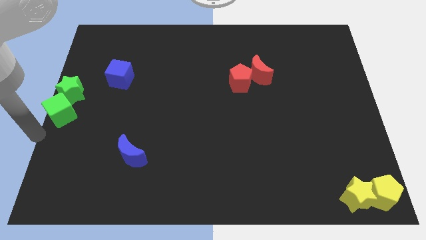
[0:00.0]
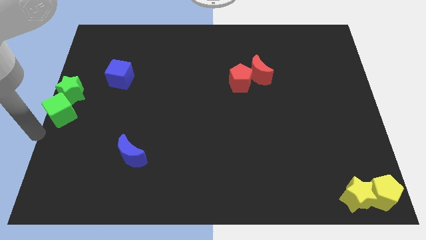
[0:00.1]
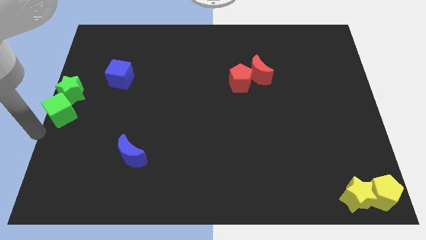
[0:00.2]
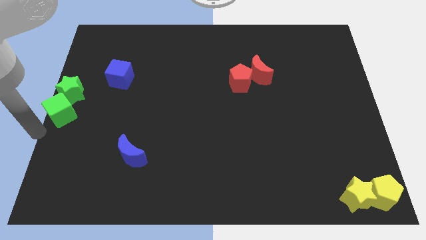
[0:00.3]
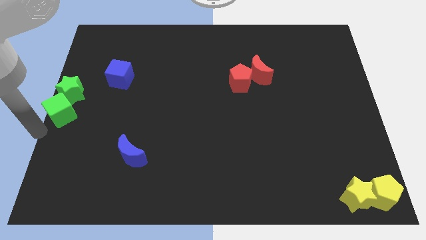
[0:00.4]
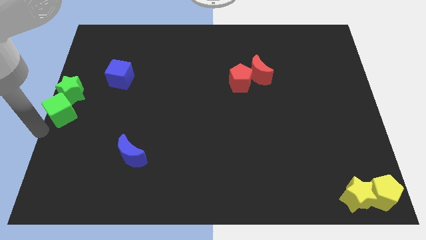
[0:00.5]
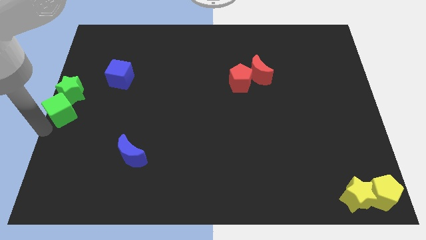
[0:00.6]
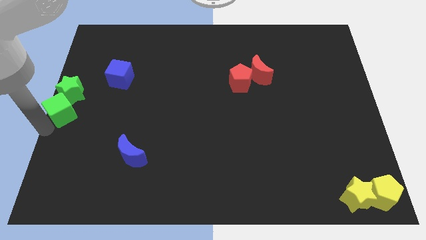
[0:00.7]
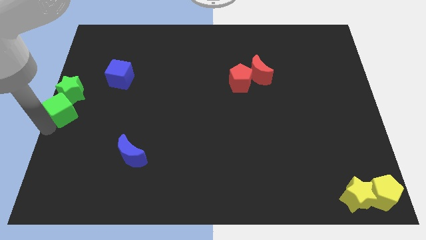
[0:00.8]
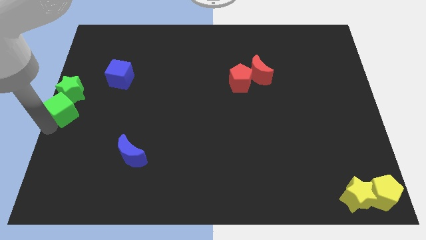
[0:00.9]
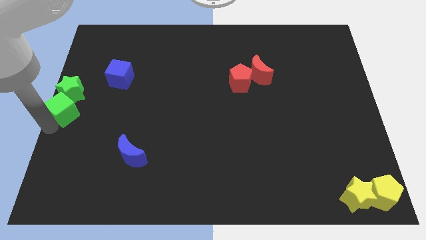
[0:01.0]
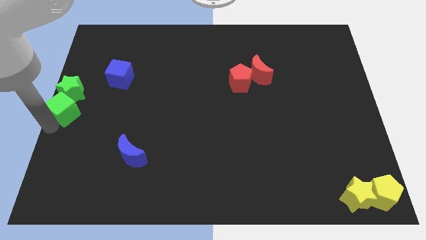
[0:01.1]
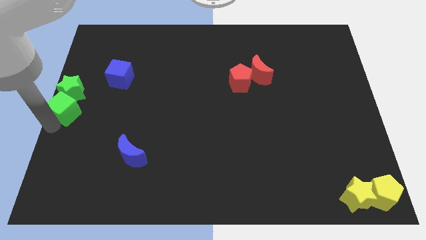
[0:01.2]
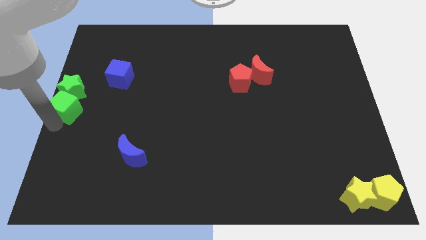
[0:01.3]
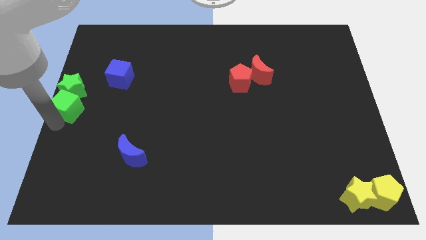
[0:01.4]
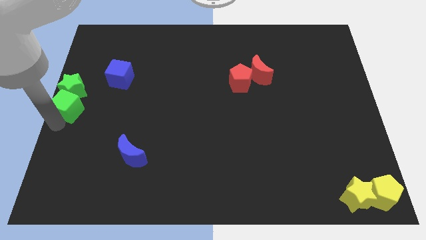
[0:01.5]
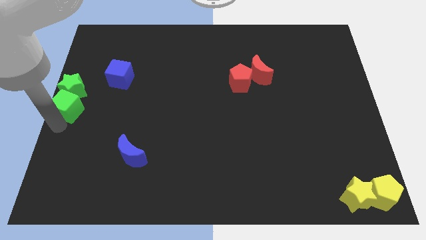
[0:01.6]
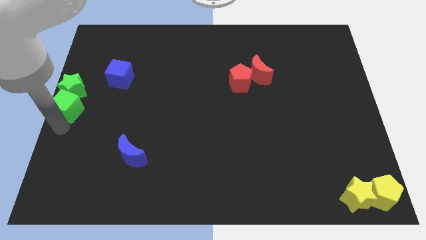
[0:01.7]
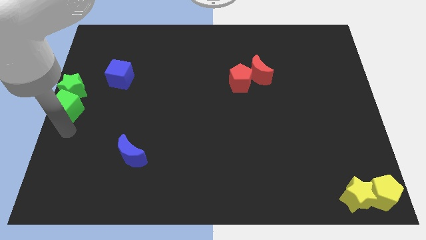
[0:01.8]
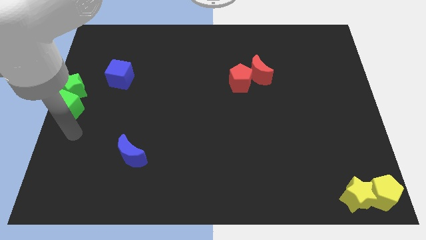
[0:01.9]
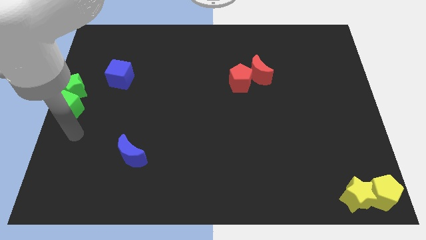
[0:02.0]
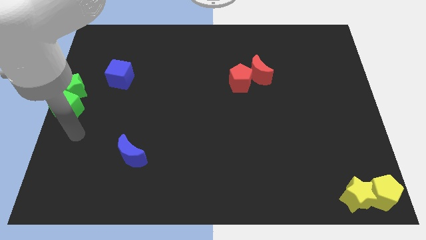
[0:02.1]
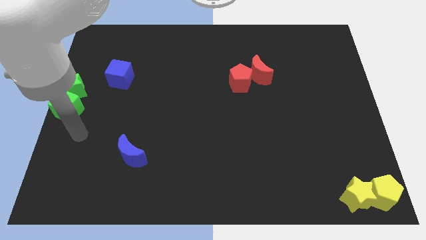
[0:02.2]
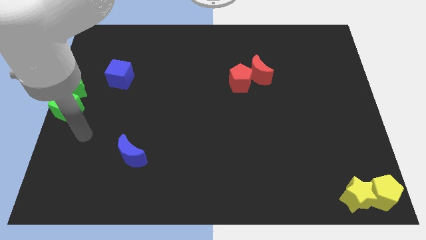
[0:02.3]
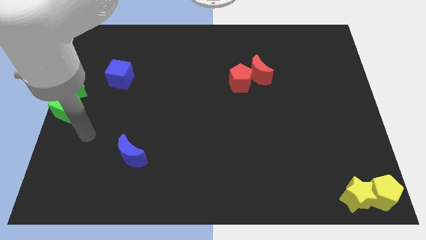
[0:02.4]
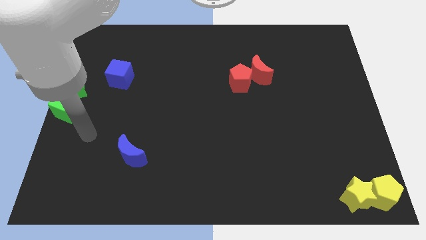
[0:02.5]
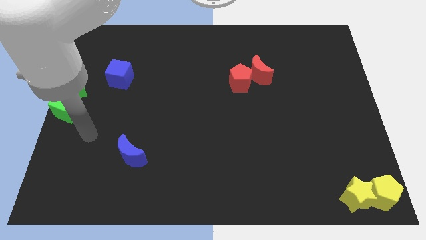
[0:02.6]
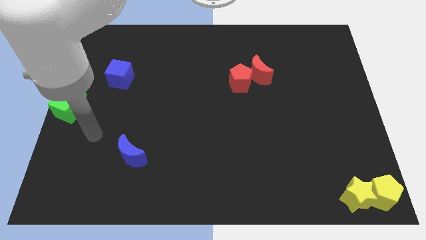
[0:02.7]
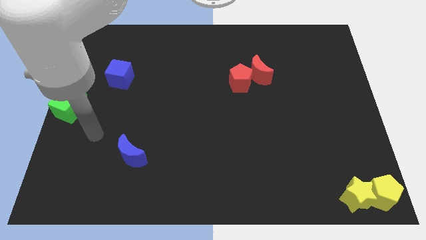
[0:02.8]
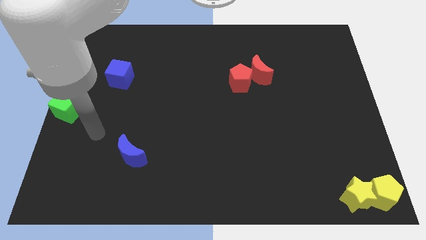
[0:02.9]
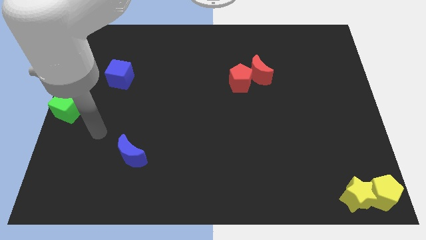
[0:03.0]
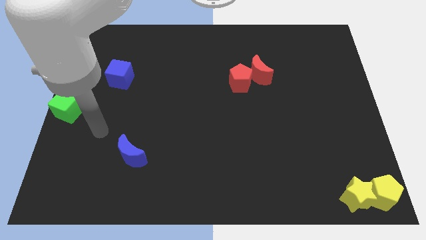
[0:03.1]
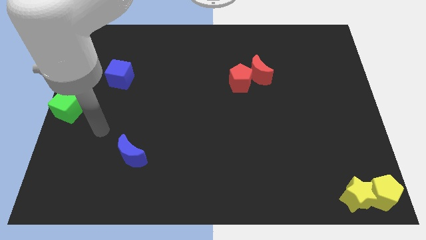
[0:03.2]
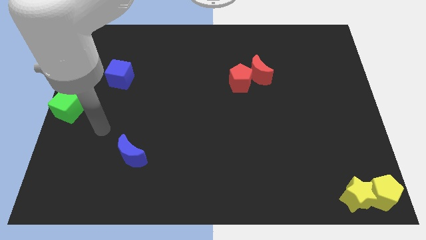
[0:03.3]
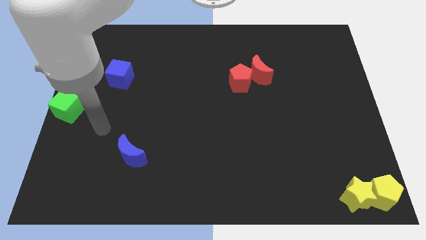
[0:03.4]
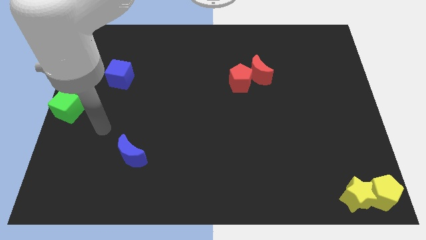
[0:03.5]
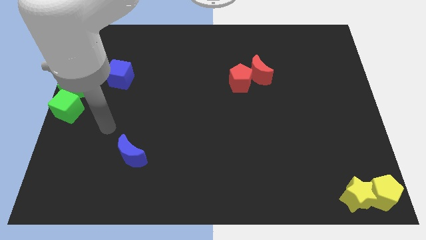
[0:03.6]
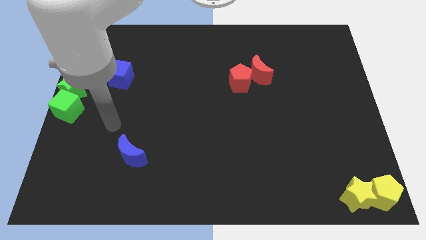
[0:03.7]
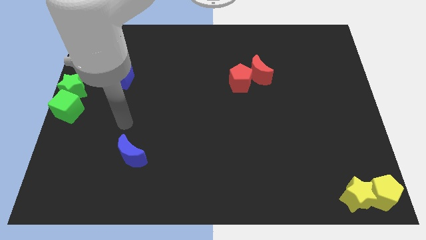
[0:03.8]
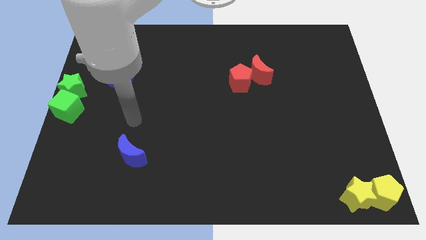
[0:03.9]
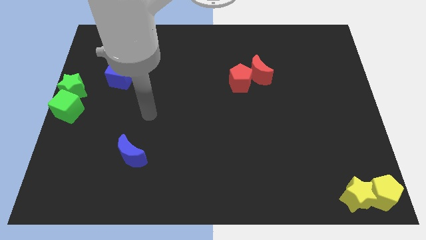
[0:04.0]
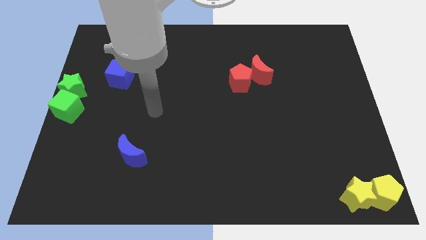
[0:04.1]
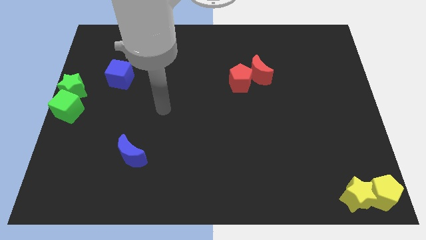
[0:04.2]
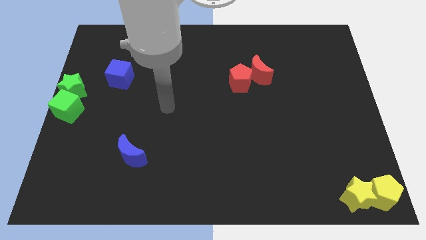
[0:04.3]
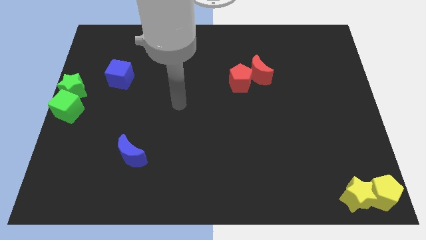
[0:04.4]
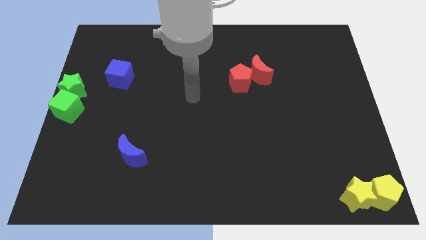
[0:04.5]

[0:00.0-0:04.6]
move the arm towards the left of the red pentagon

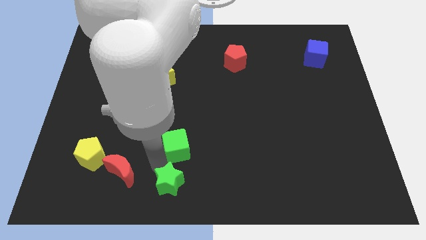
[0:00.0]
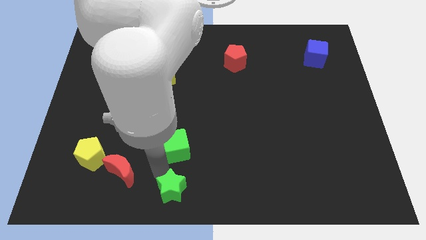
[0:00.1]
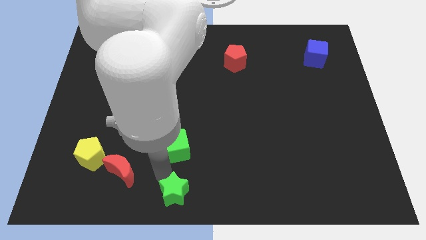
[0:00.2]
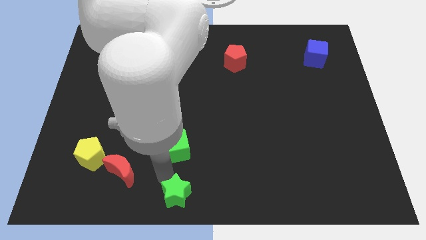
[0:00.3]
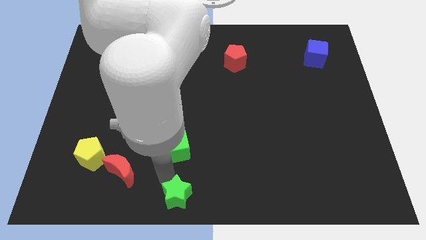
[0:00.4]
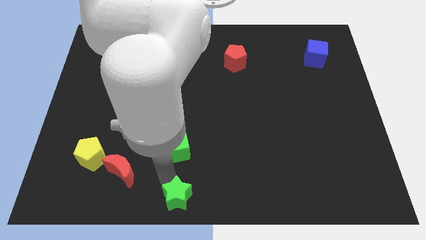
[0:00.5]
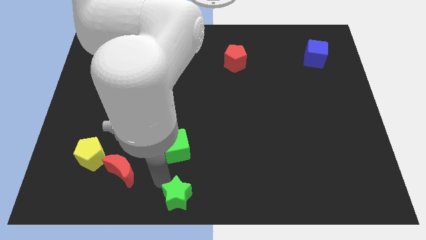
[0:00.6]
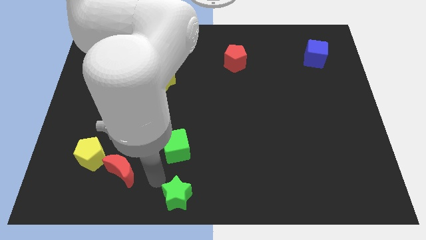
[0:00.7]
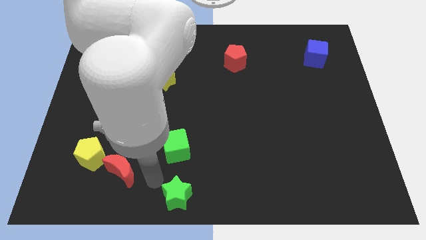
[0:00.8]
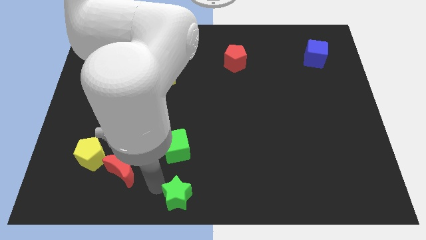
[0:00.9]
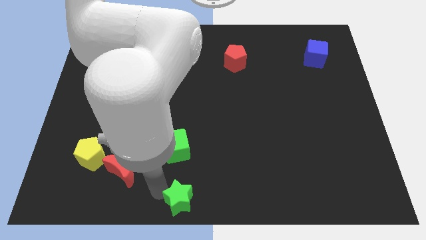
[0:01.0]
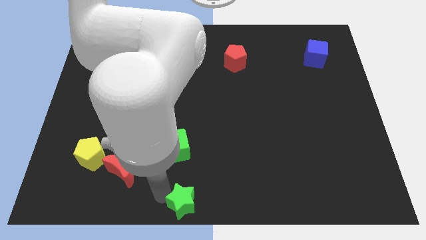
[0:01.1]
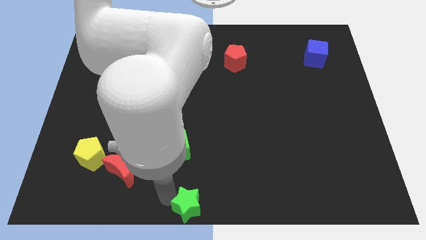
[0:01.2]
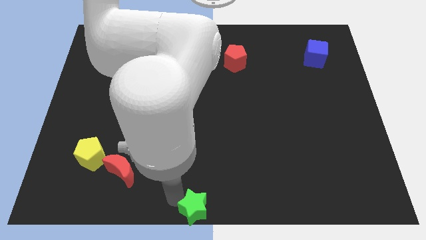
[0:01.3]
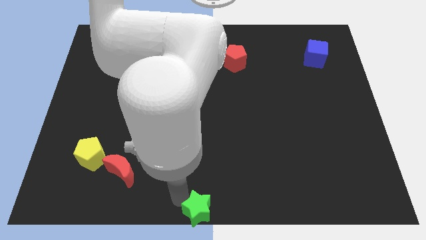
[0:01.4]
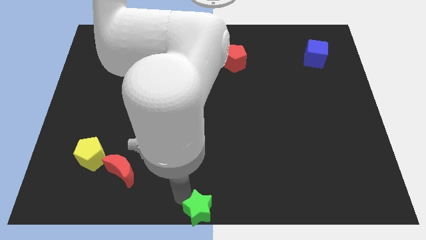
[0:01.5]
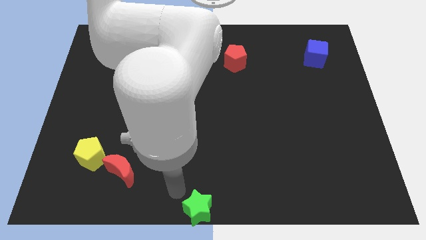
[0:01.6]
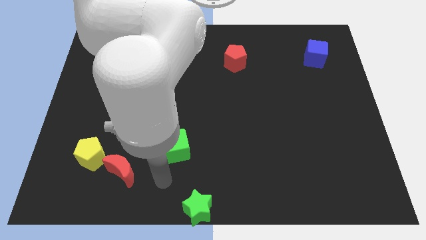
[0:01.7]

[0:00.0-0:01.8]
slide the green star to the bottom center of the board

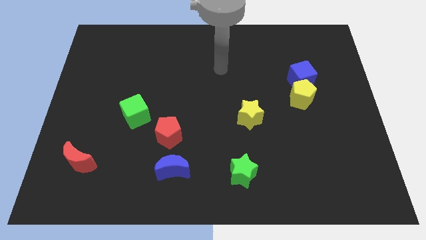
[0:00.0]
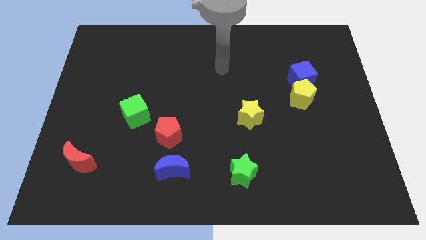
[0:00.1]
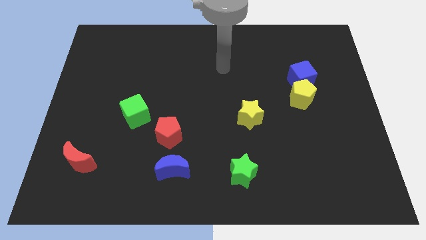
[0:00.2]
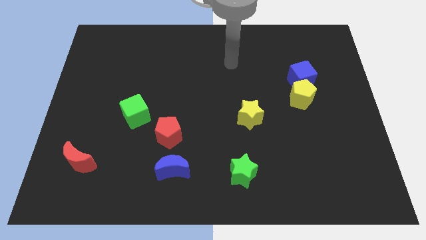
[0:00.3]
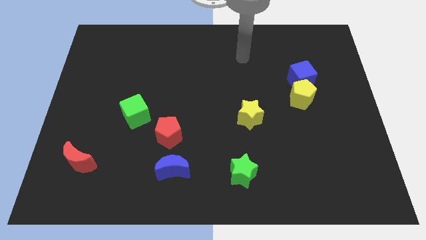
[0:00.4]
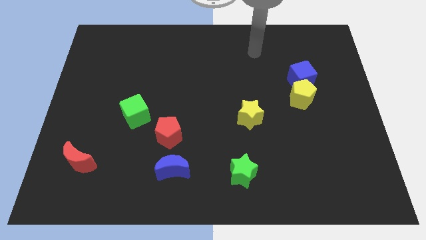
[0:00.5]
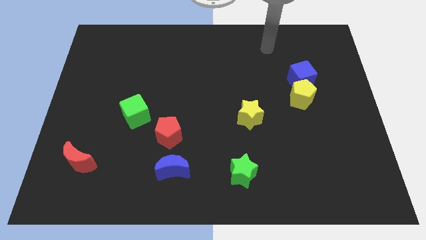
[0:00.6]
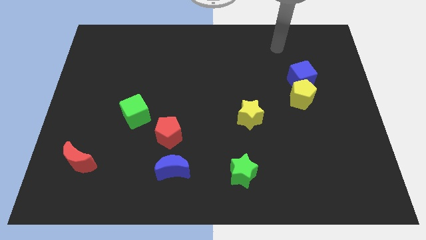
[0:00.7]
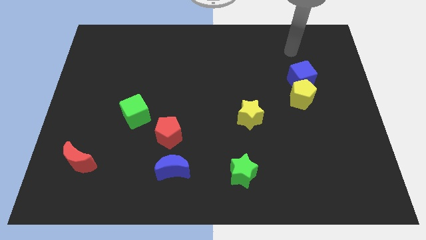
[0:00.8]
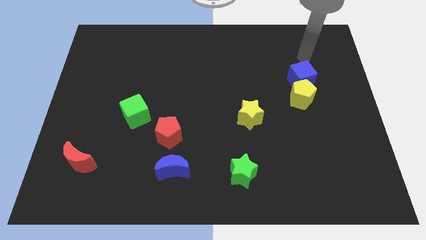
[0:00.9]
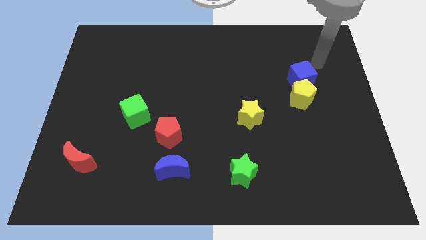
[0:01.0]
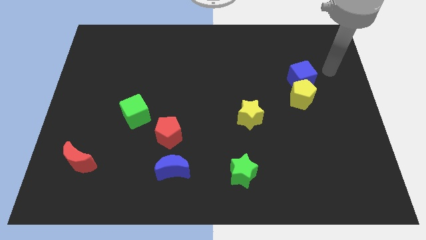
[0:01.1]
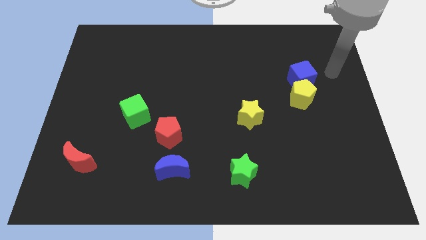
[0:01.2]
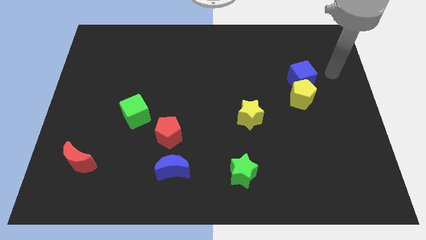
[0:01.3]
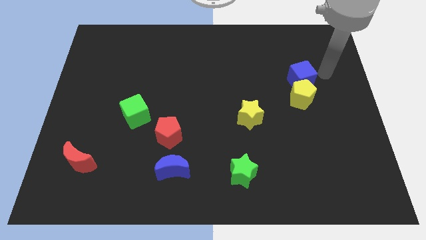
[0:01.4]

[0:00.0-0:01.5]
place your arm at the right of the blue cube

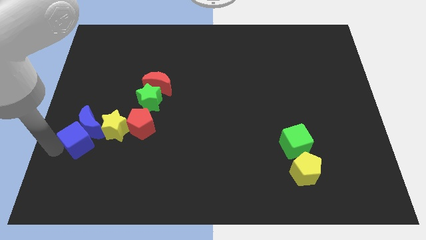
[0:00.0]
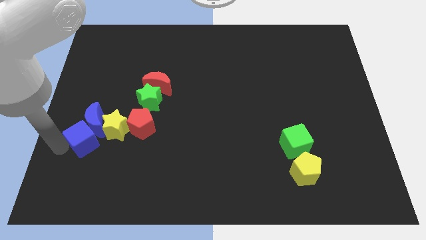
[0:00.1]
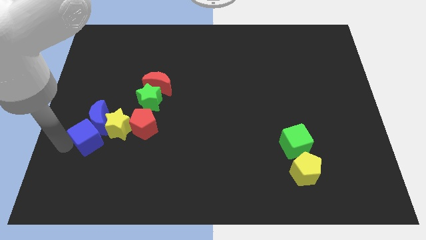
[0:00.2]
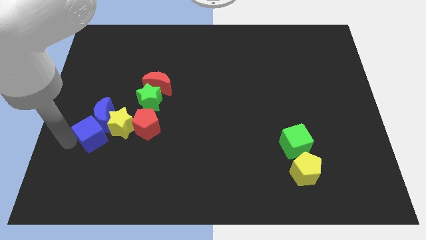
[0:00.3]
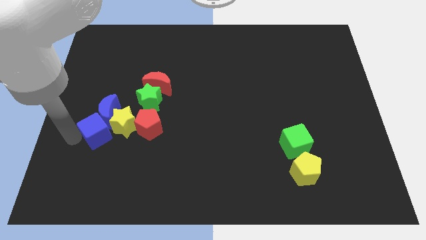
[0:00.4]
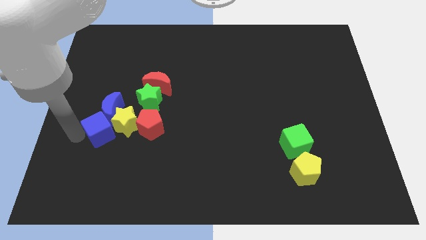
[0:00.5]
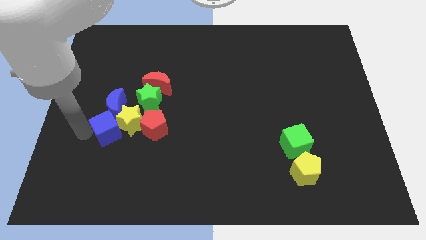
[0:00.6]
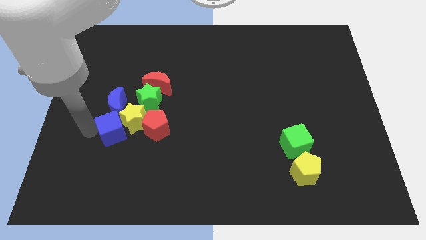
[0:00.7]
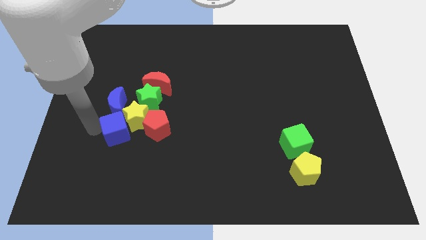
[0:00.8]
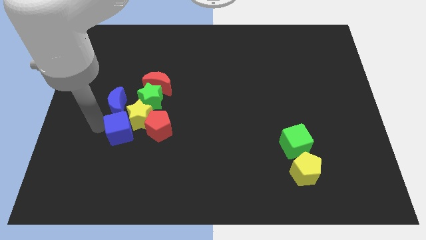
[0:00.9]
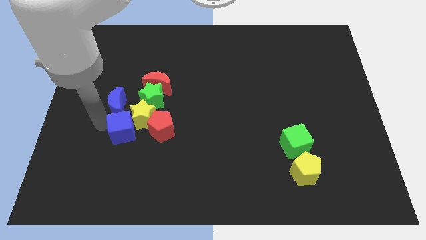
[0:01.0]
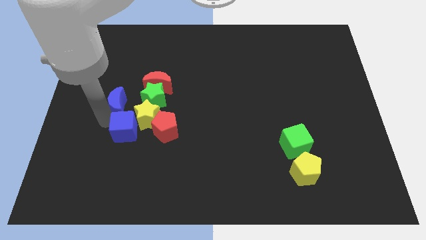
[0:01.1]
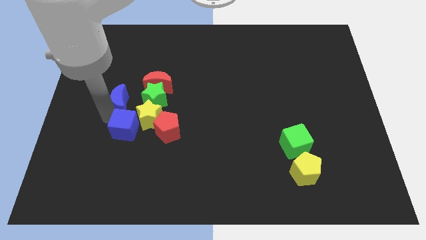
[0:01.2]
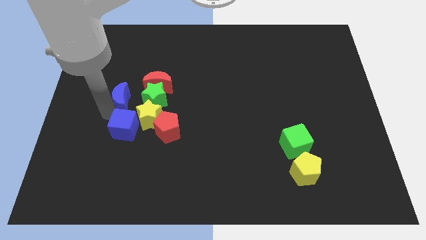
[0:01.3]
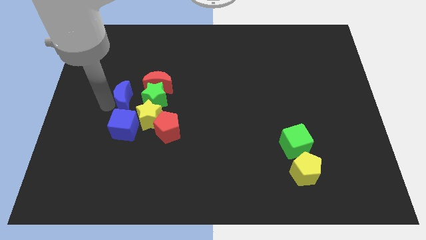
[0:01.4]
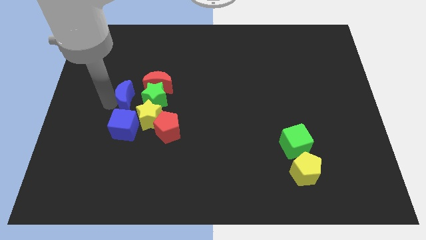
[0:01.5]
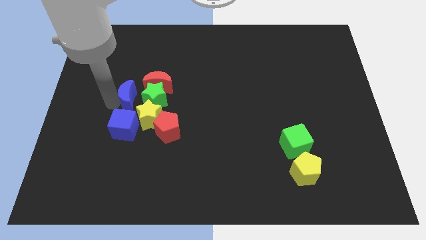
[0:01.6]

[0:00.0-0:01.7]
place the blue crescent vertically above the blue cube
